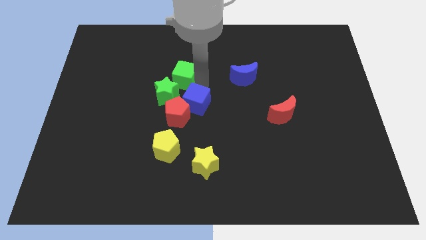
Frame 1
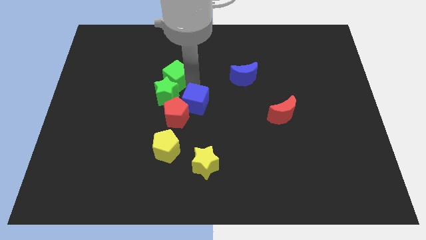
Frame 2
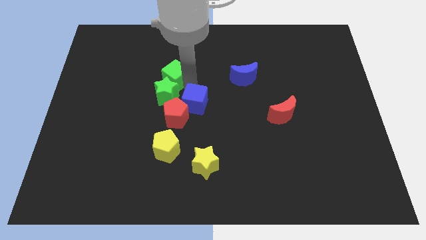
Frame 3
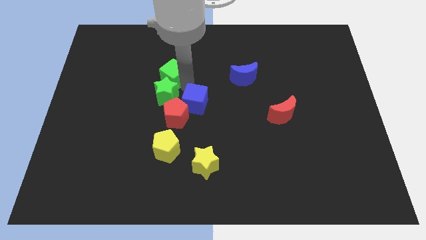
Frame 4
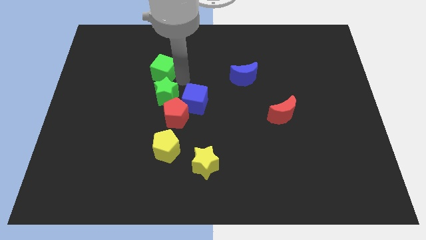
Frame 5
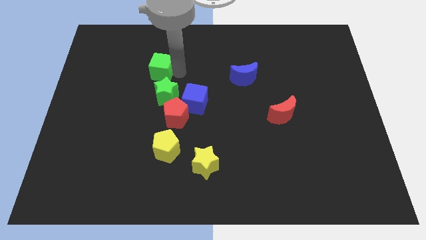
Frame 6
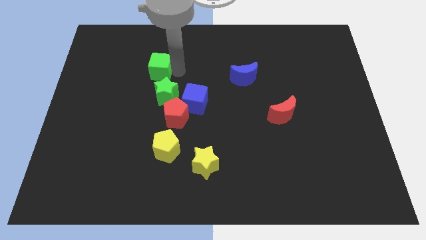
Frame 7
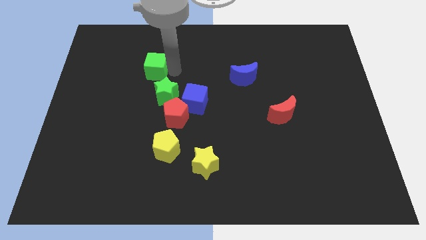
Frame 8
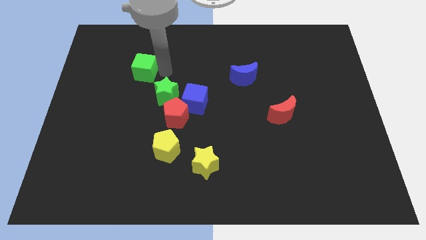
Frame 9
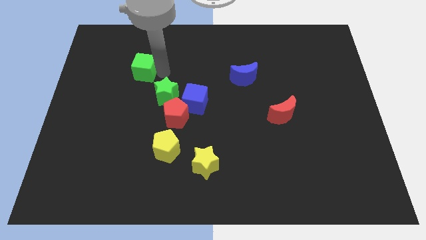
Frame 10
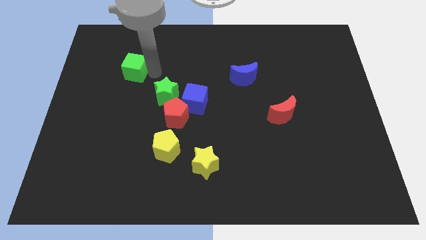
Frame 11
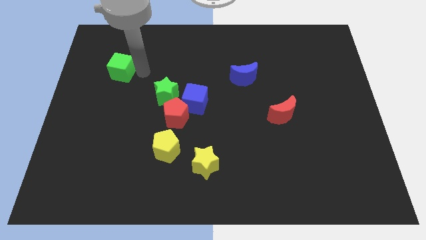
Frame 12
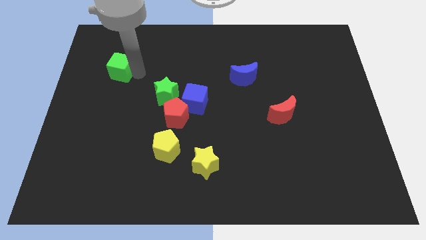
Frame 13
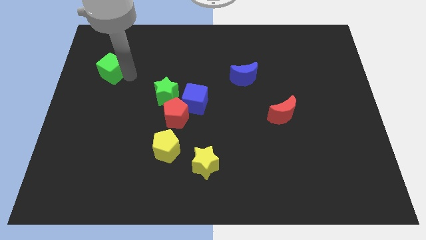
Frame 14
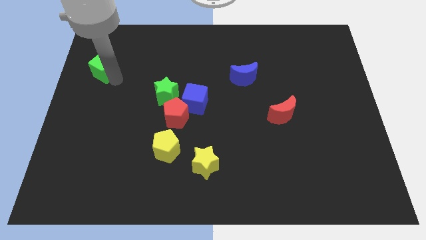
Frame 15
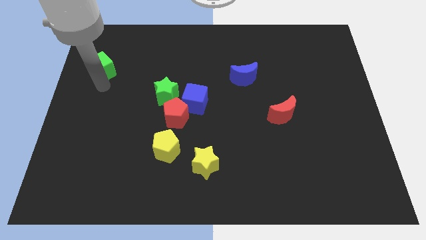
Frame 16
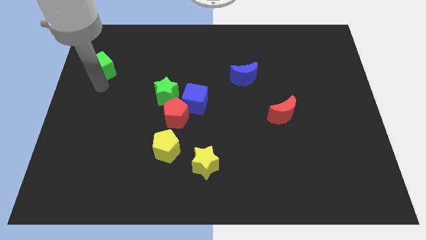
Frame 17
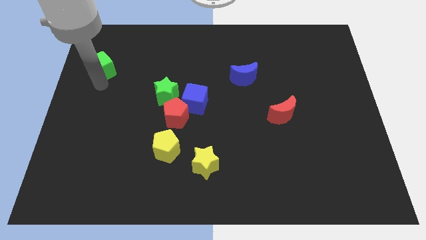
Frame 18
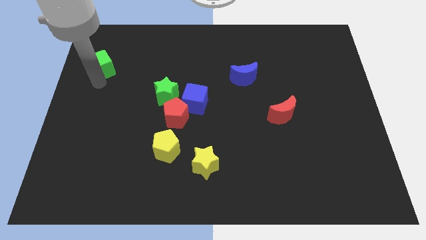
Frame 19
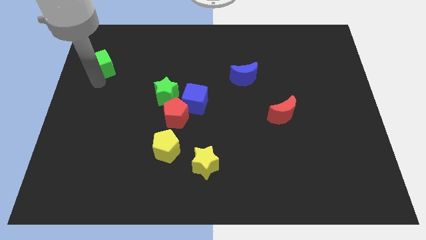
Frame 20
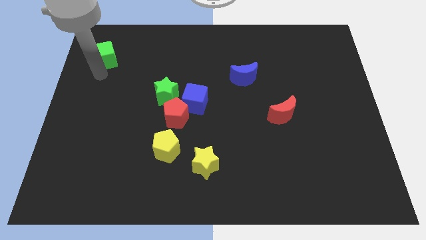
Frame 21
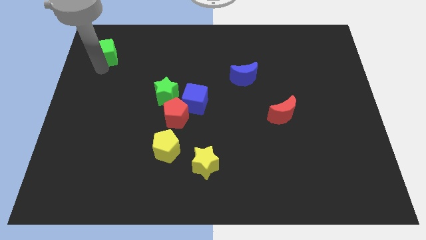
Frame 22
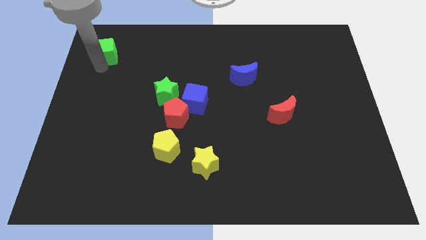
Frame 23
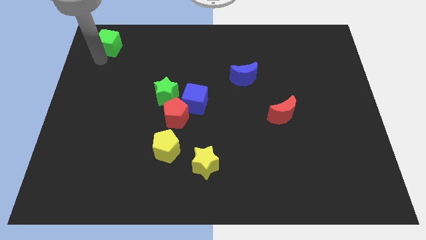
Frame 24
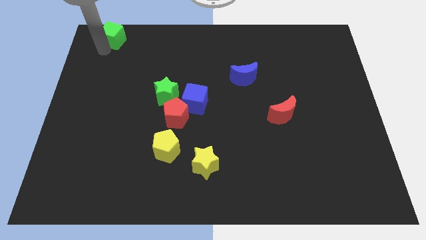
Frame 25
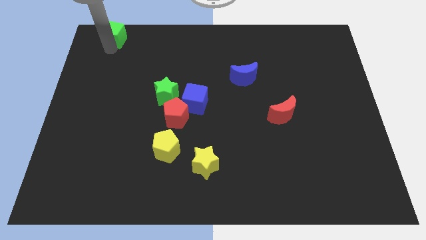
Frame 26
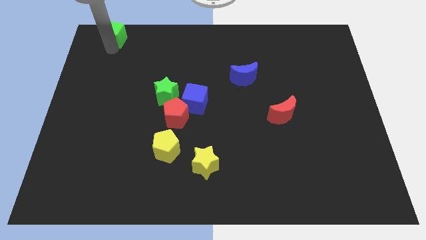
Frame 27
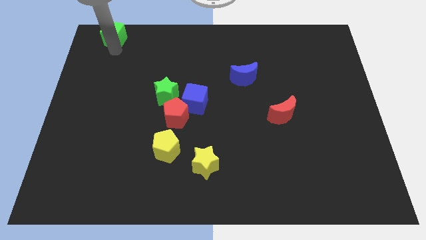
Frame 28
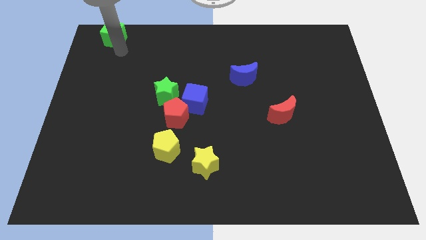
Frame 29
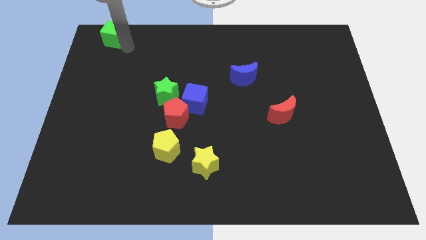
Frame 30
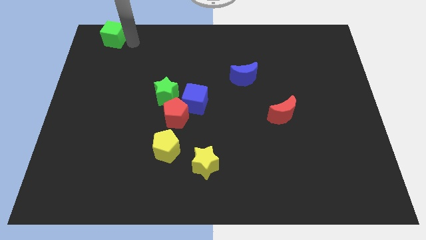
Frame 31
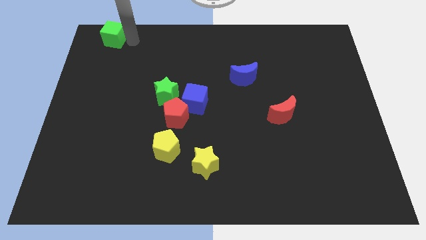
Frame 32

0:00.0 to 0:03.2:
separate green cube from the green star

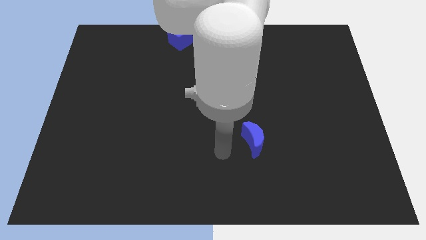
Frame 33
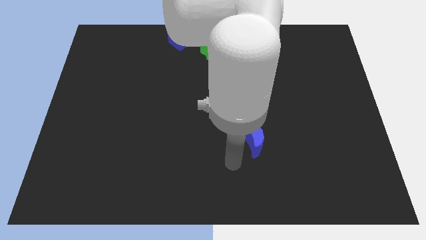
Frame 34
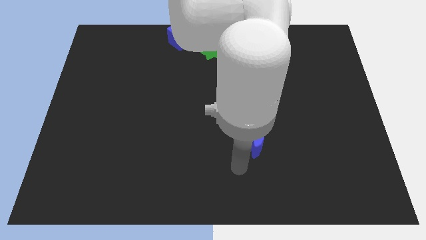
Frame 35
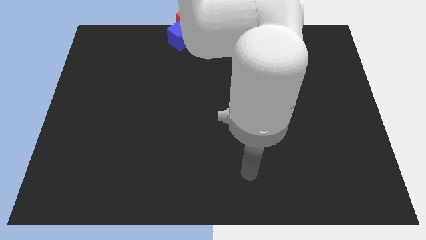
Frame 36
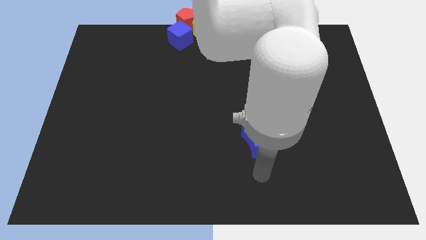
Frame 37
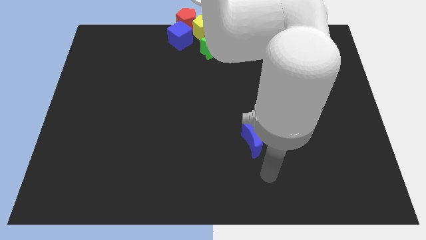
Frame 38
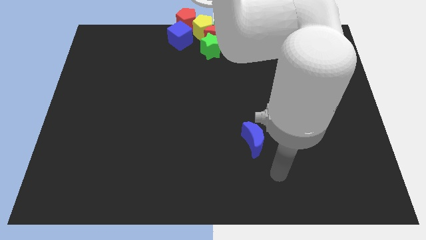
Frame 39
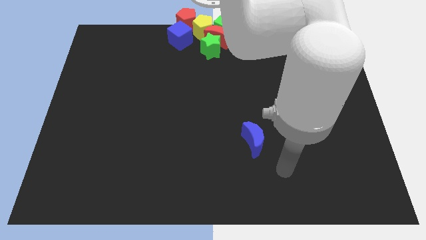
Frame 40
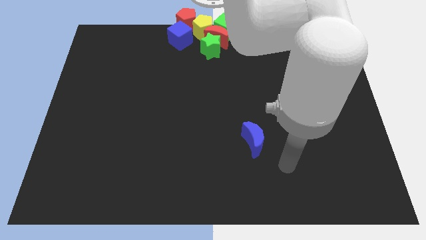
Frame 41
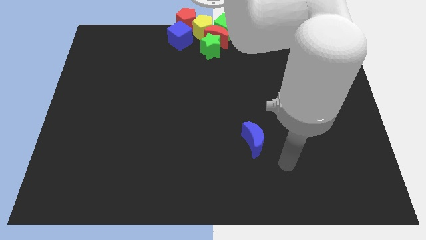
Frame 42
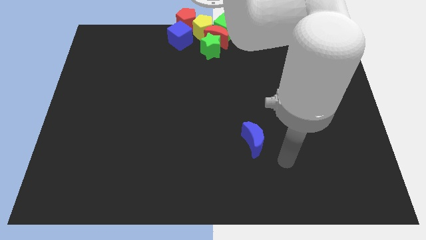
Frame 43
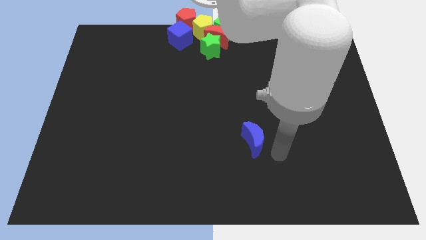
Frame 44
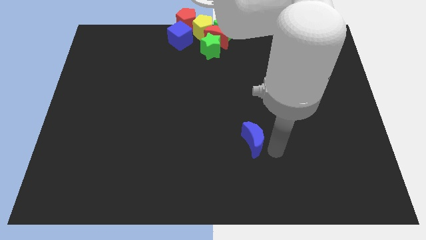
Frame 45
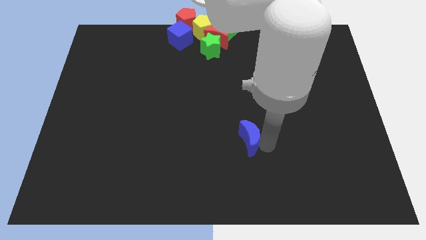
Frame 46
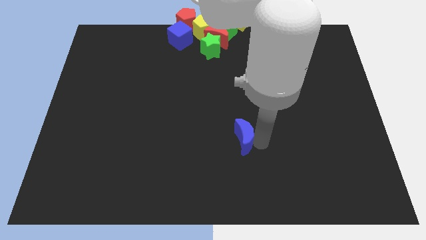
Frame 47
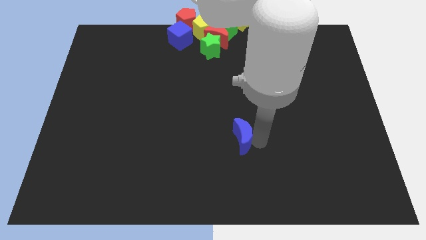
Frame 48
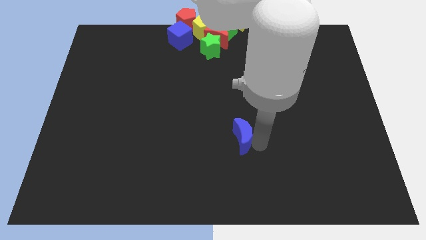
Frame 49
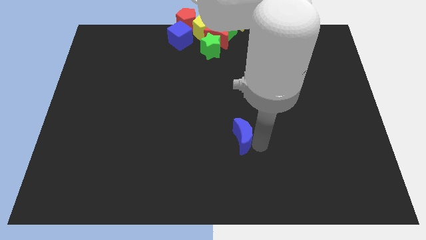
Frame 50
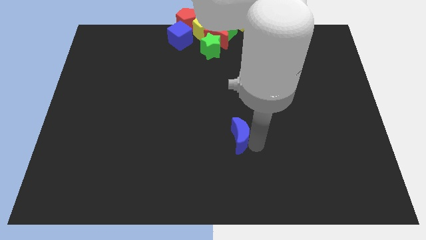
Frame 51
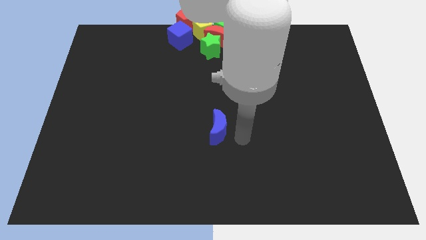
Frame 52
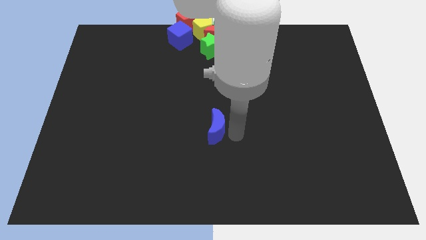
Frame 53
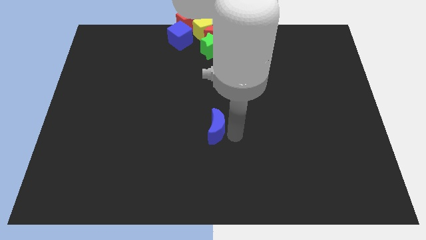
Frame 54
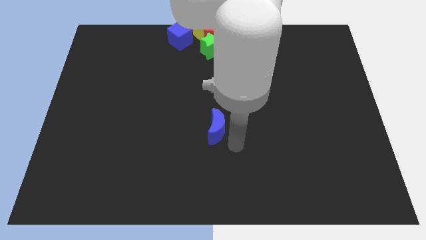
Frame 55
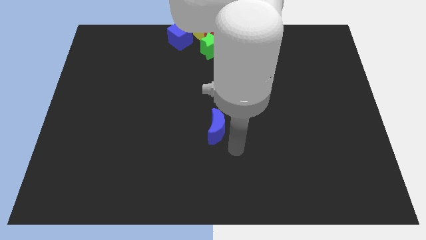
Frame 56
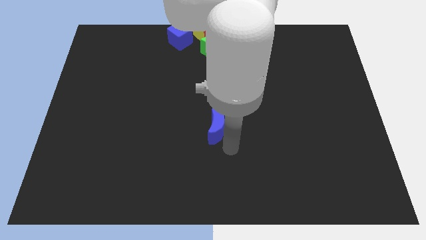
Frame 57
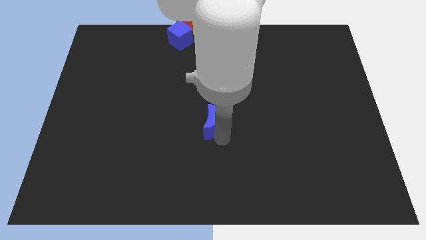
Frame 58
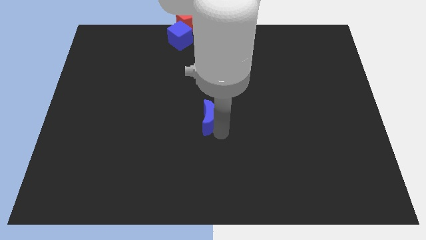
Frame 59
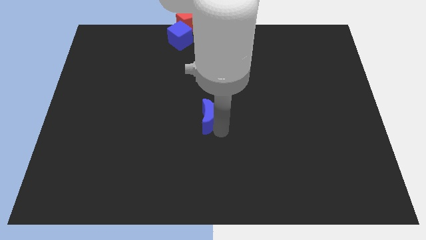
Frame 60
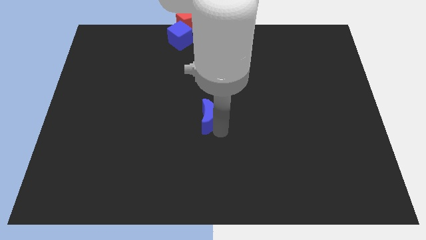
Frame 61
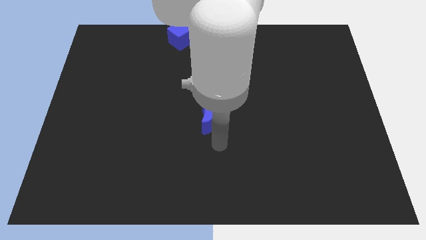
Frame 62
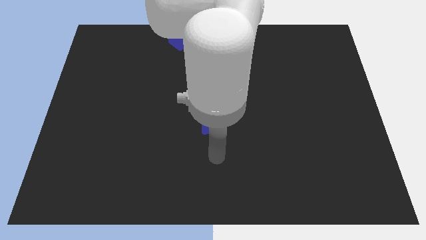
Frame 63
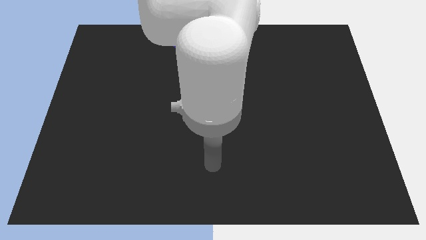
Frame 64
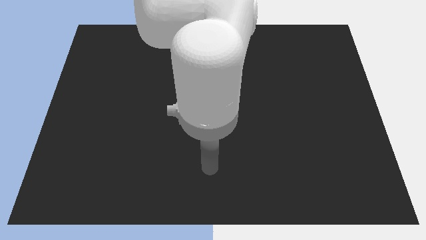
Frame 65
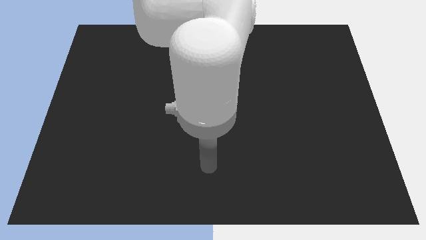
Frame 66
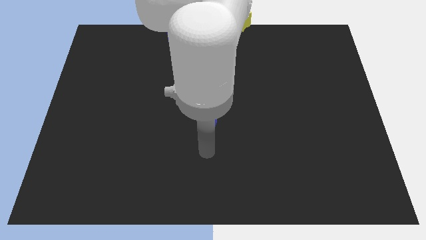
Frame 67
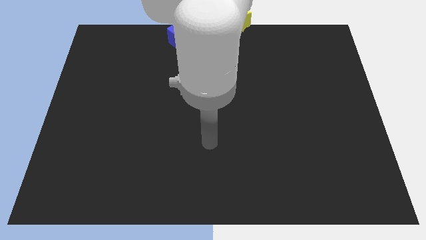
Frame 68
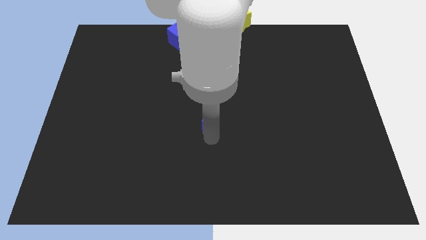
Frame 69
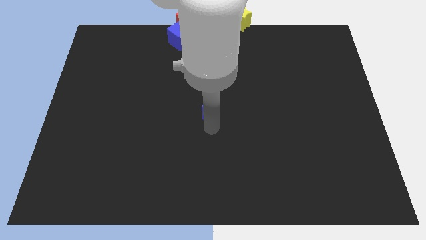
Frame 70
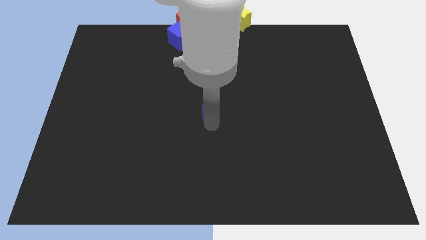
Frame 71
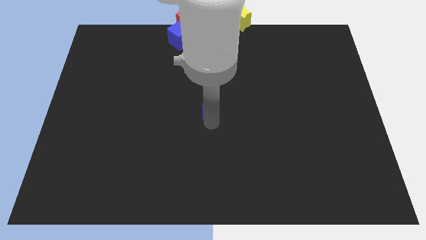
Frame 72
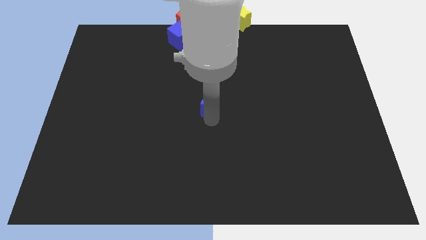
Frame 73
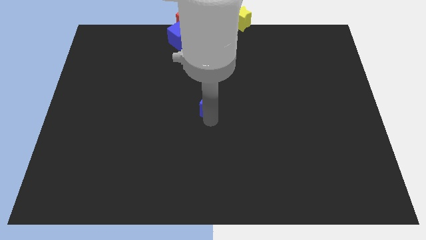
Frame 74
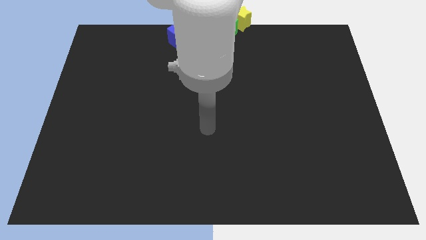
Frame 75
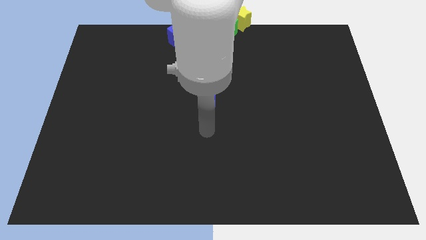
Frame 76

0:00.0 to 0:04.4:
push the blue moon towards the center

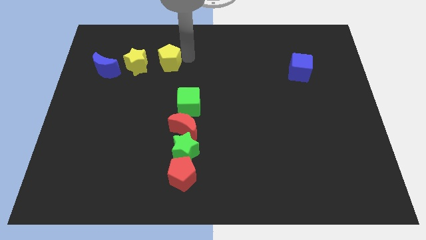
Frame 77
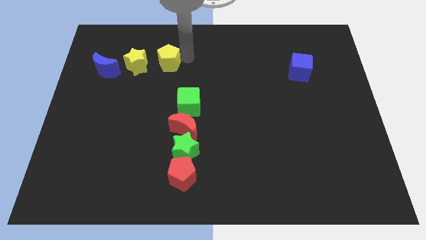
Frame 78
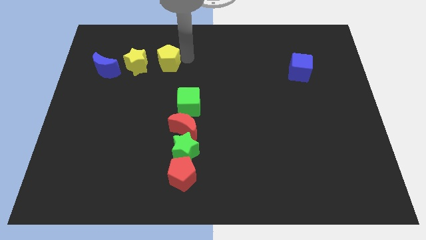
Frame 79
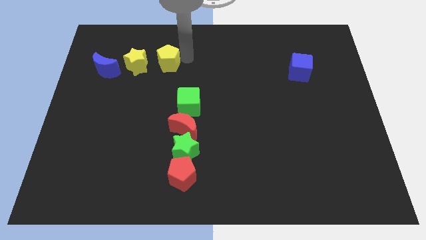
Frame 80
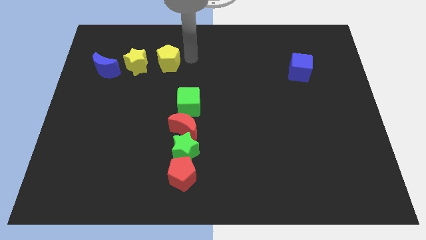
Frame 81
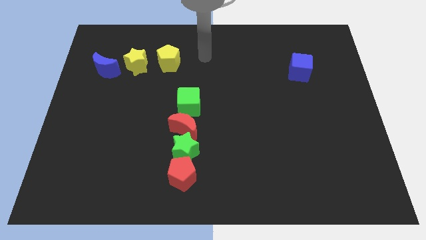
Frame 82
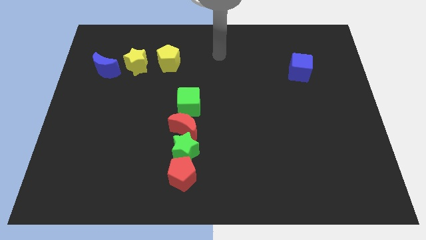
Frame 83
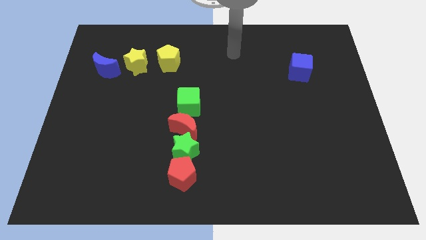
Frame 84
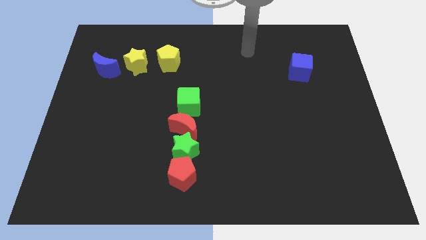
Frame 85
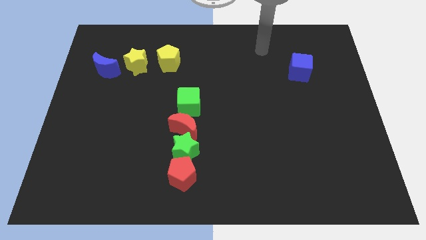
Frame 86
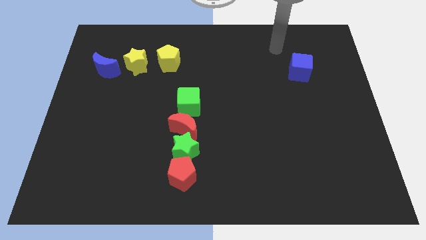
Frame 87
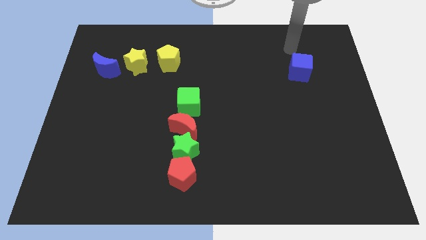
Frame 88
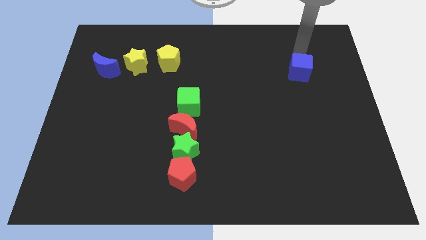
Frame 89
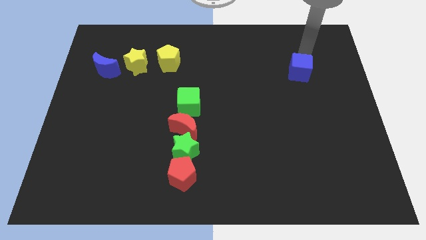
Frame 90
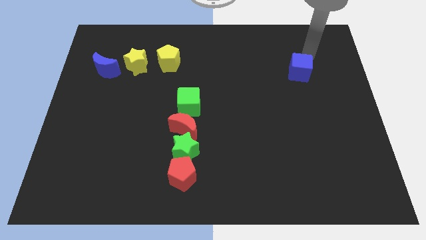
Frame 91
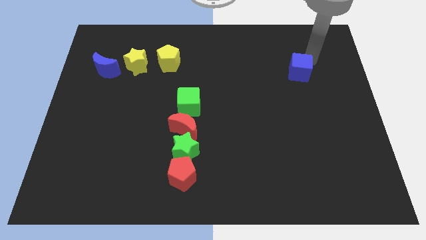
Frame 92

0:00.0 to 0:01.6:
go near blue cube
